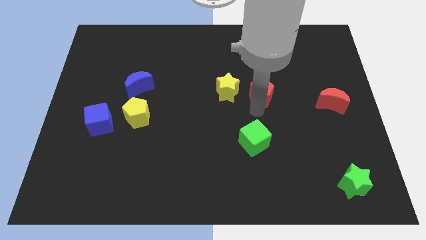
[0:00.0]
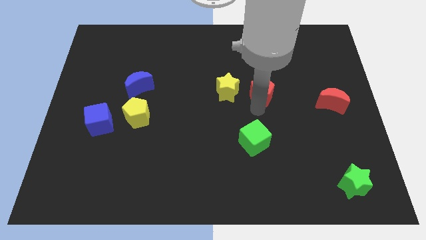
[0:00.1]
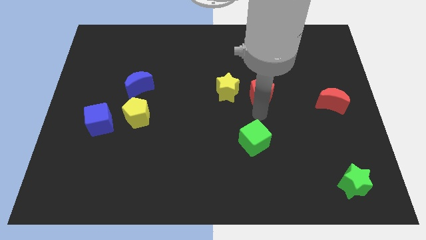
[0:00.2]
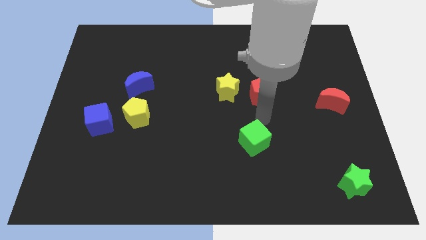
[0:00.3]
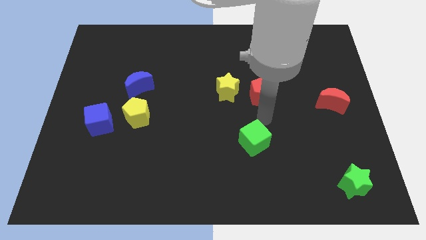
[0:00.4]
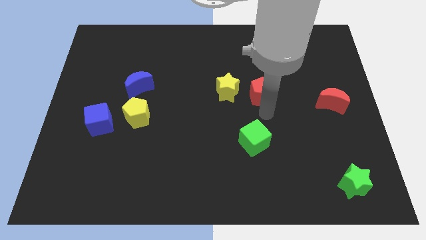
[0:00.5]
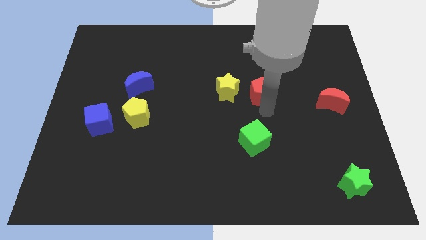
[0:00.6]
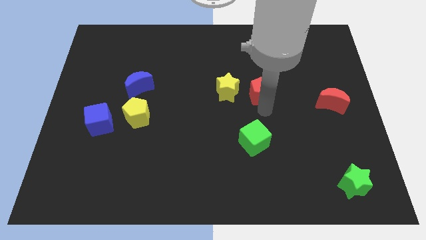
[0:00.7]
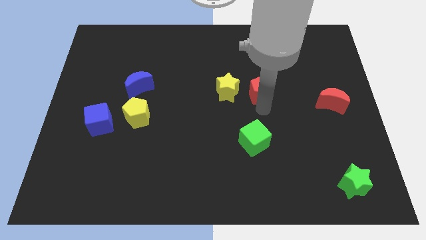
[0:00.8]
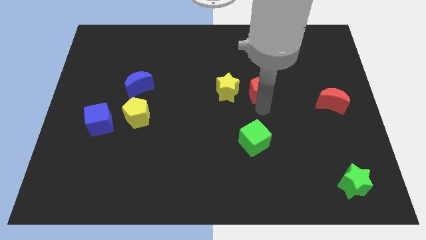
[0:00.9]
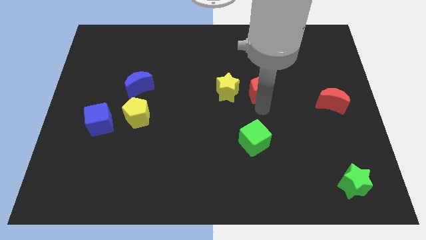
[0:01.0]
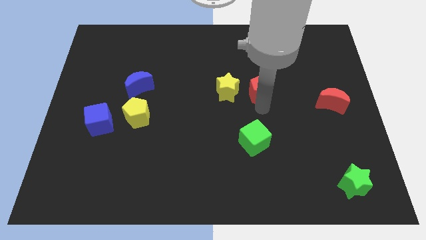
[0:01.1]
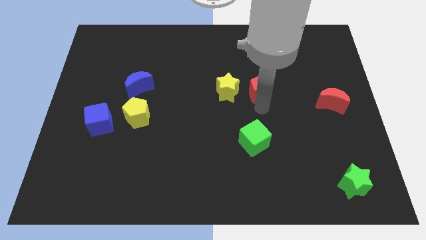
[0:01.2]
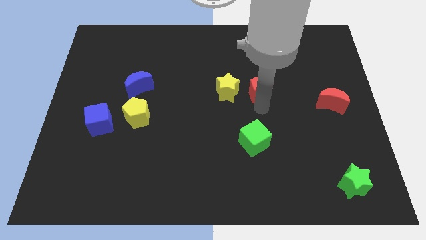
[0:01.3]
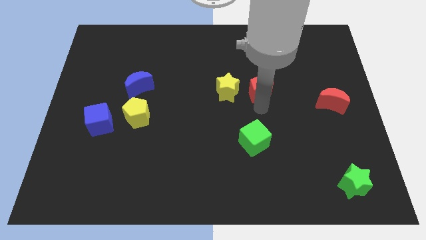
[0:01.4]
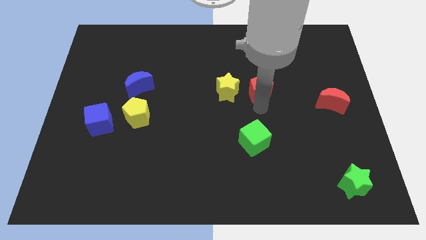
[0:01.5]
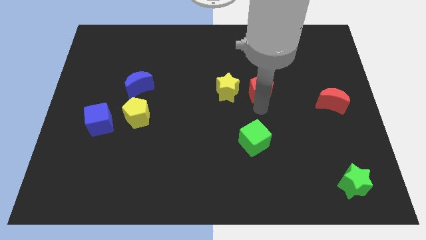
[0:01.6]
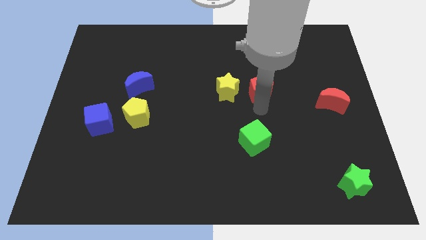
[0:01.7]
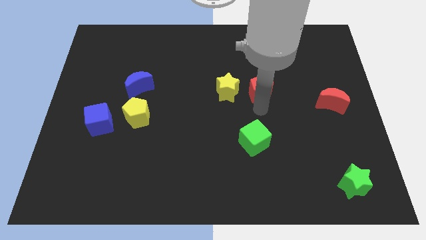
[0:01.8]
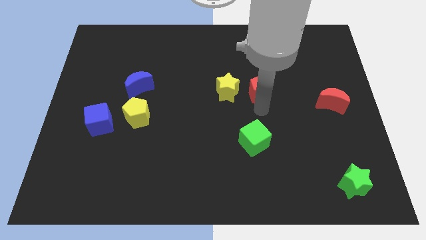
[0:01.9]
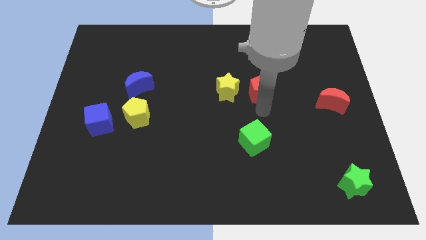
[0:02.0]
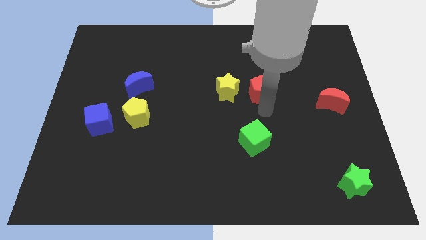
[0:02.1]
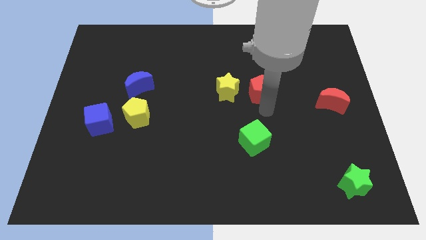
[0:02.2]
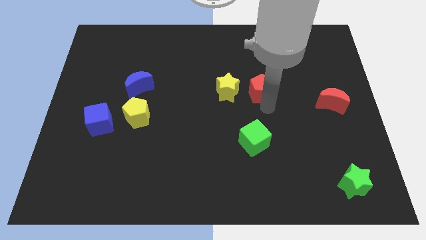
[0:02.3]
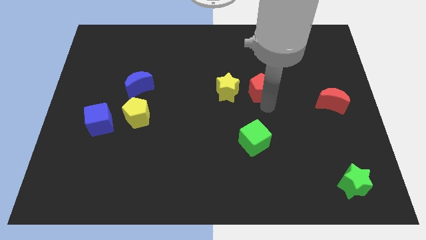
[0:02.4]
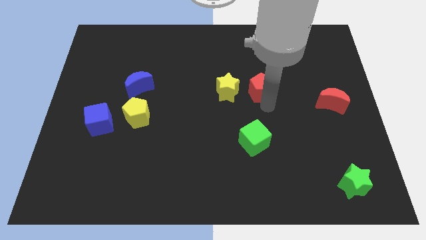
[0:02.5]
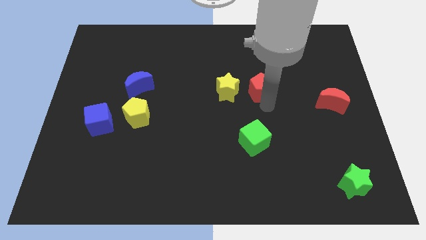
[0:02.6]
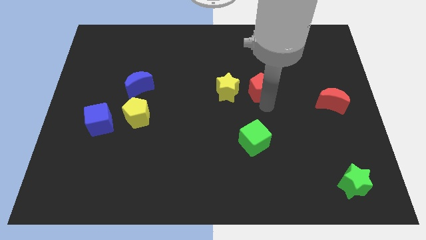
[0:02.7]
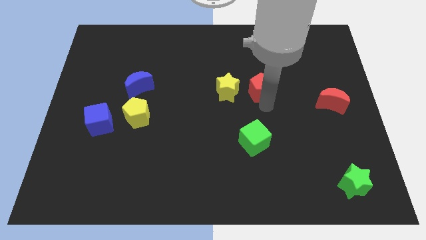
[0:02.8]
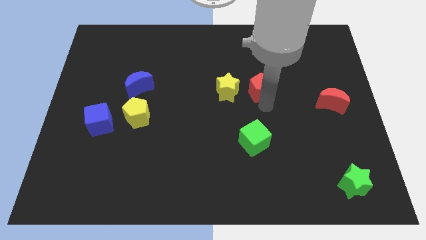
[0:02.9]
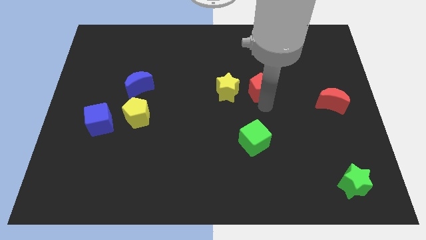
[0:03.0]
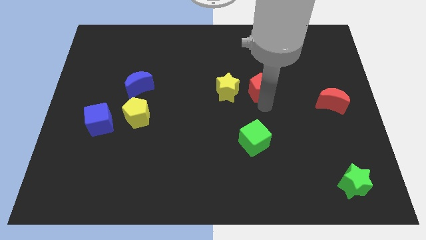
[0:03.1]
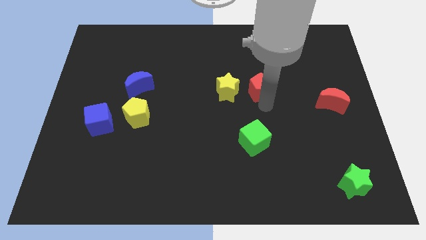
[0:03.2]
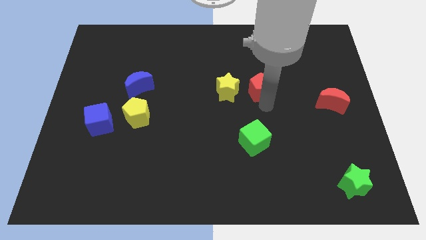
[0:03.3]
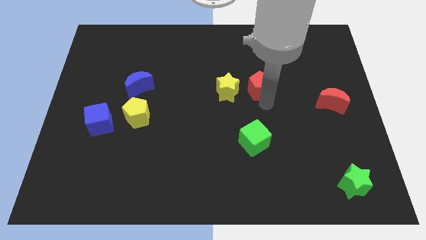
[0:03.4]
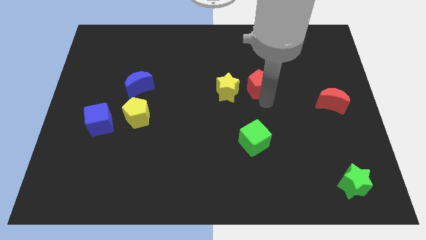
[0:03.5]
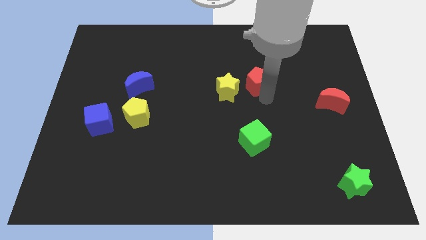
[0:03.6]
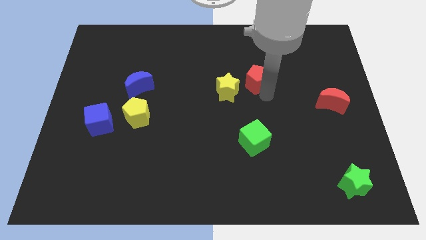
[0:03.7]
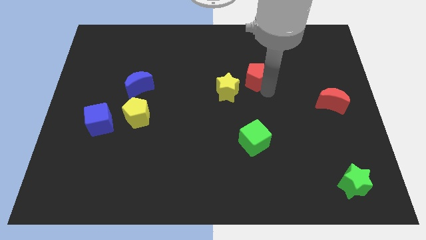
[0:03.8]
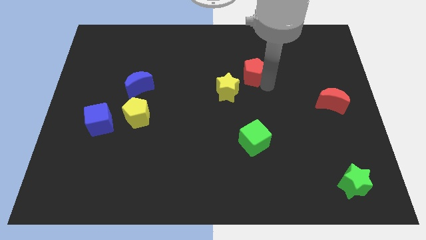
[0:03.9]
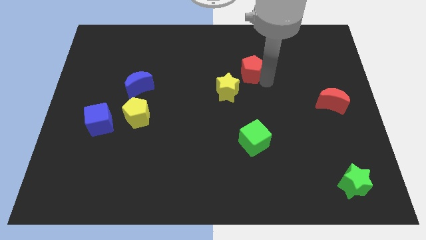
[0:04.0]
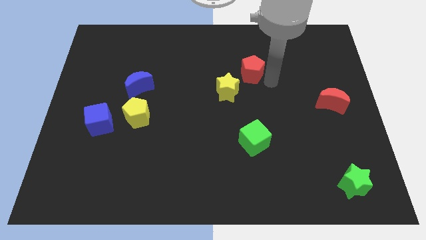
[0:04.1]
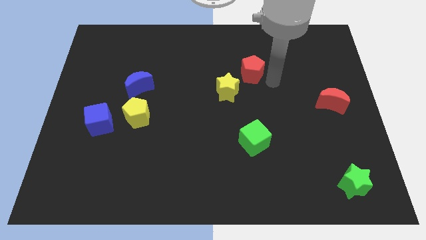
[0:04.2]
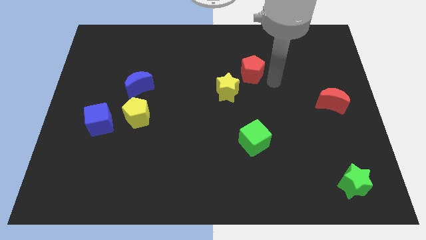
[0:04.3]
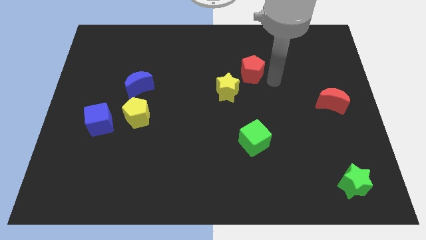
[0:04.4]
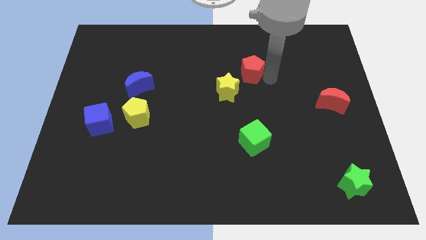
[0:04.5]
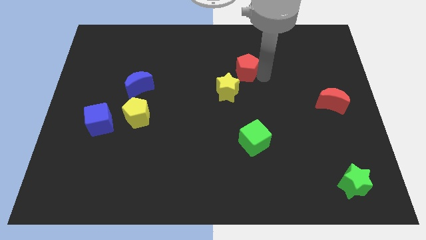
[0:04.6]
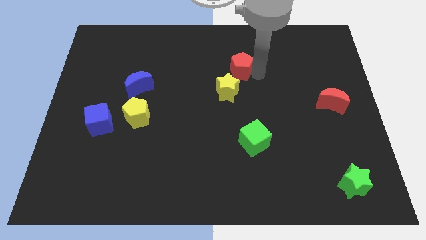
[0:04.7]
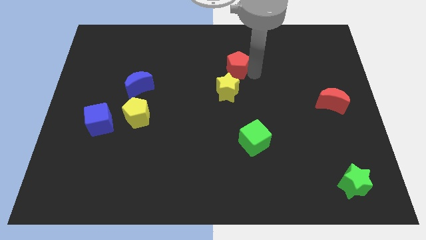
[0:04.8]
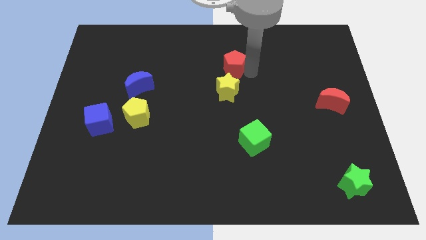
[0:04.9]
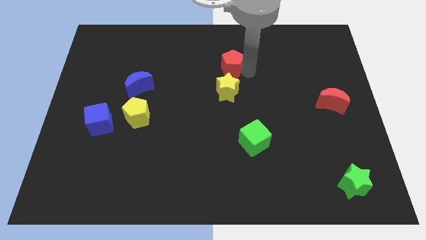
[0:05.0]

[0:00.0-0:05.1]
move the red pentagon to the top center of the board

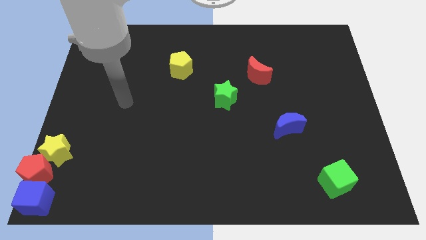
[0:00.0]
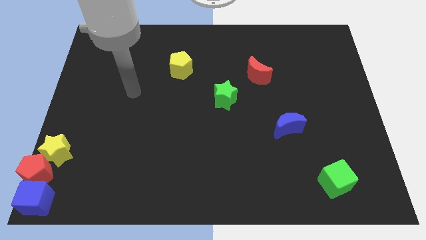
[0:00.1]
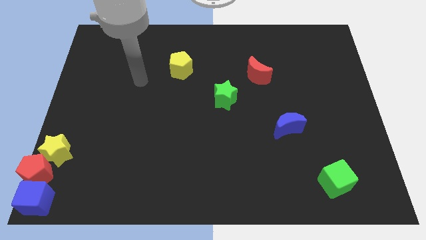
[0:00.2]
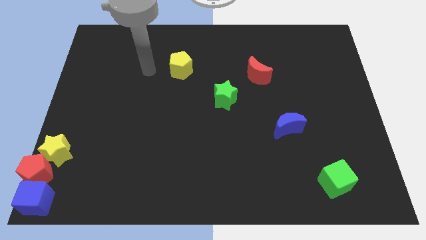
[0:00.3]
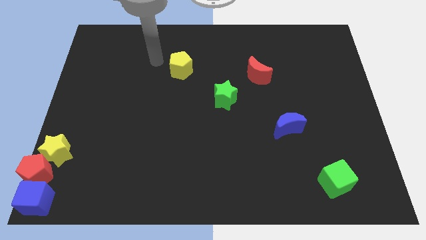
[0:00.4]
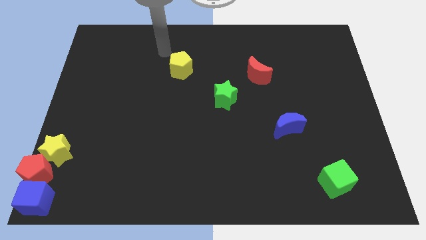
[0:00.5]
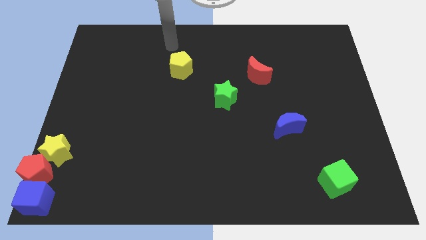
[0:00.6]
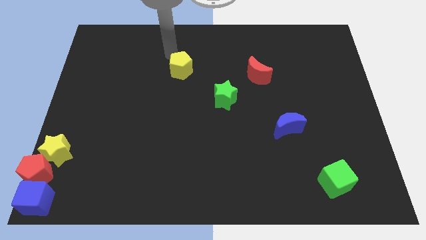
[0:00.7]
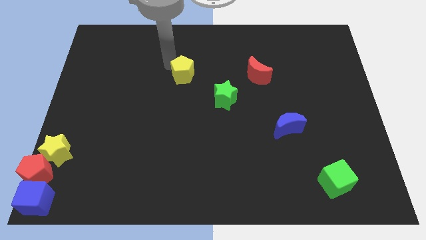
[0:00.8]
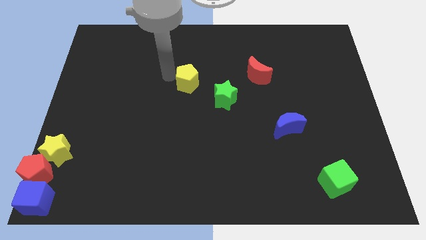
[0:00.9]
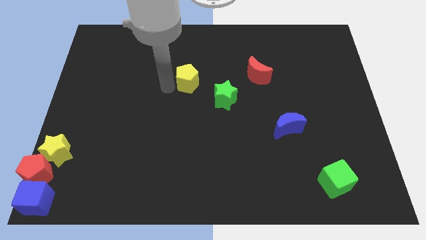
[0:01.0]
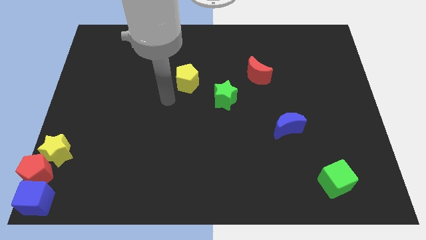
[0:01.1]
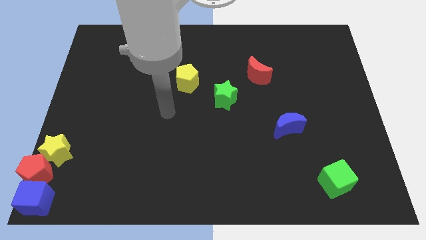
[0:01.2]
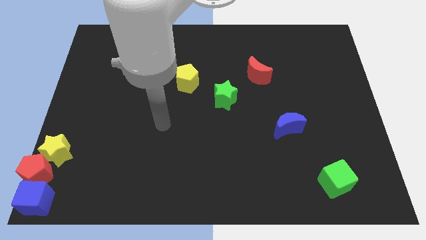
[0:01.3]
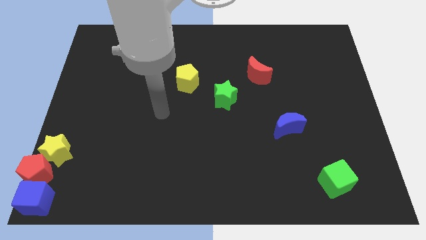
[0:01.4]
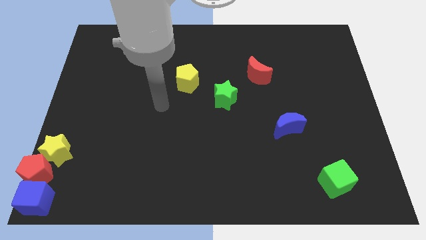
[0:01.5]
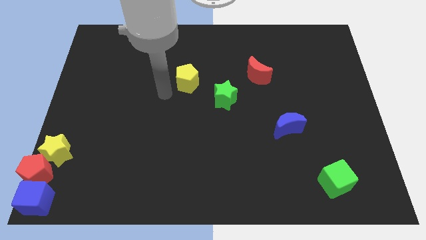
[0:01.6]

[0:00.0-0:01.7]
move the yellow pentagon slightly to the right

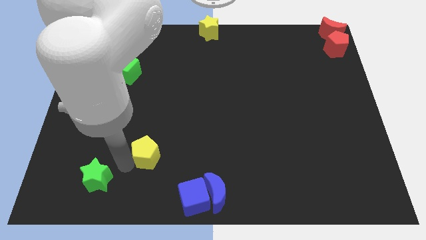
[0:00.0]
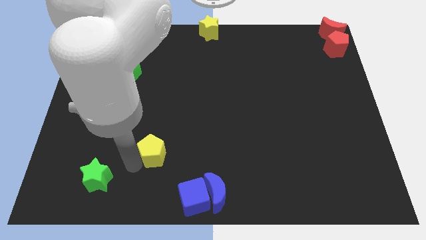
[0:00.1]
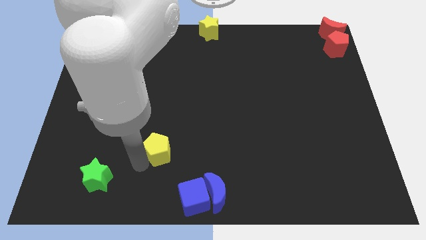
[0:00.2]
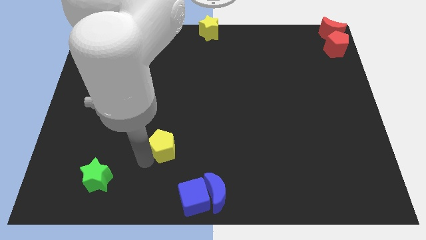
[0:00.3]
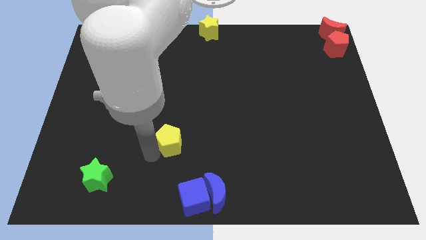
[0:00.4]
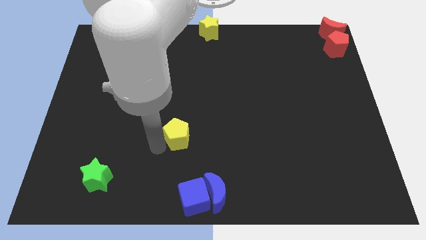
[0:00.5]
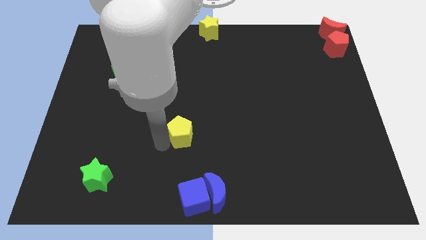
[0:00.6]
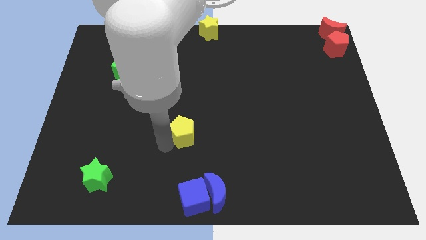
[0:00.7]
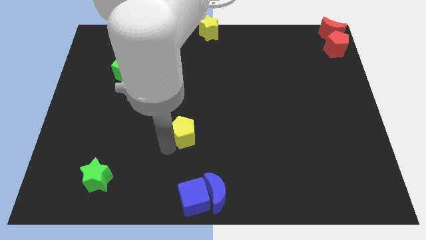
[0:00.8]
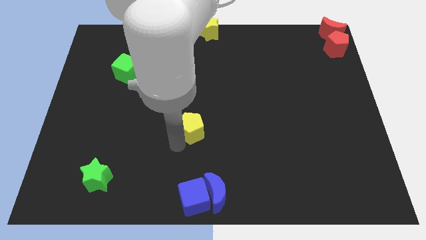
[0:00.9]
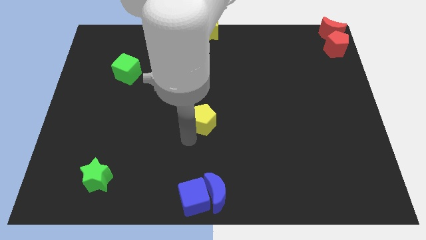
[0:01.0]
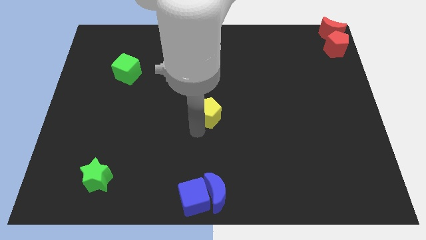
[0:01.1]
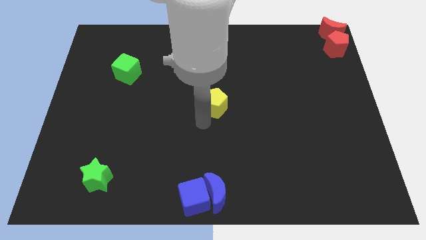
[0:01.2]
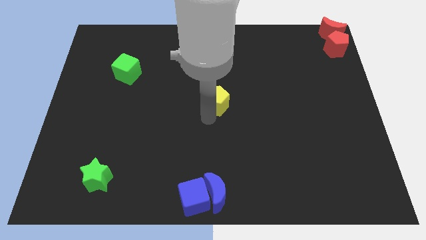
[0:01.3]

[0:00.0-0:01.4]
place yellow pentagon at the center of the board

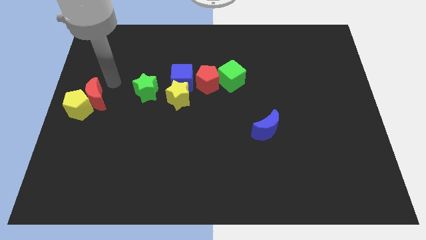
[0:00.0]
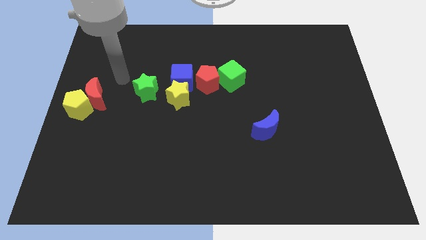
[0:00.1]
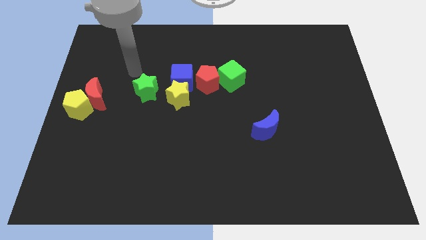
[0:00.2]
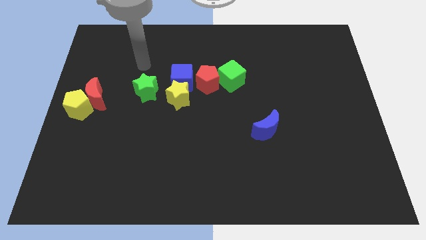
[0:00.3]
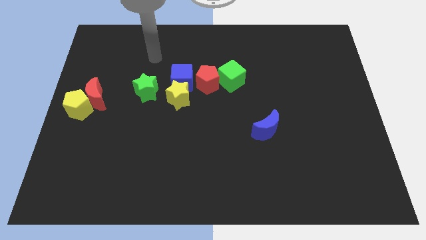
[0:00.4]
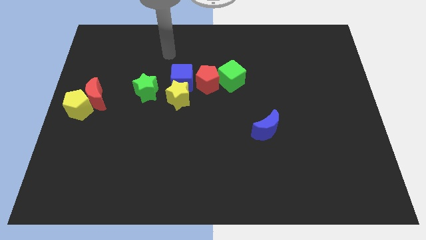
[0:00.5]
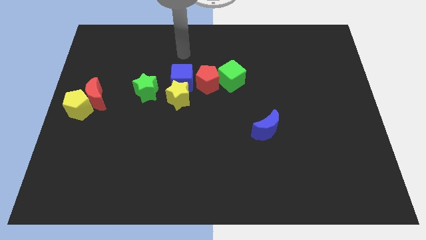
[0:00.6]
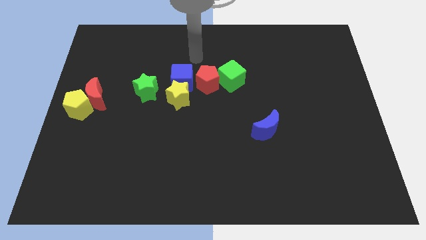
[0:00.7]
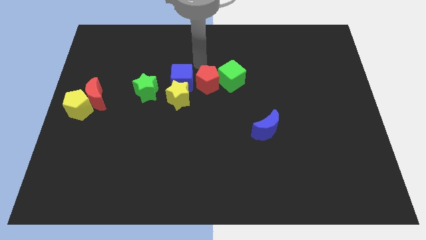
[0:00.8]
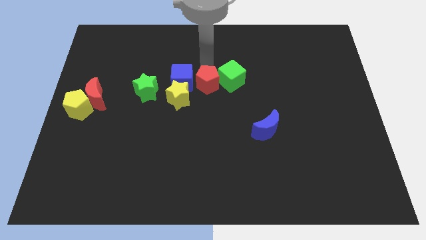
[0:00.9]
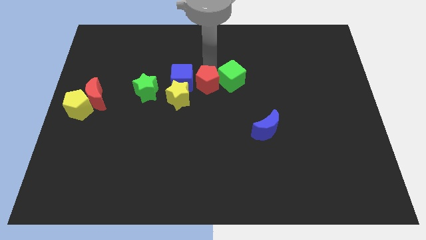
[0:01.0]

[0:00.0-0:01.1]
place your arm above the red pentagon
